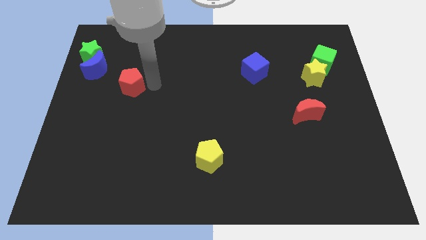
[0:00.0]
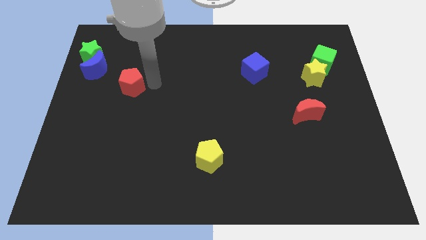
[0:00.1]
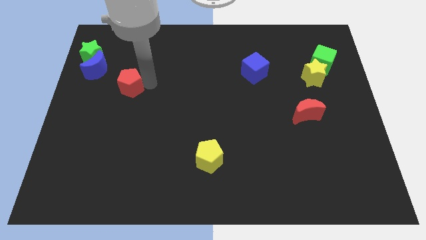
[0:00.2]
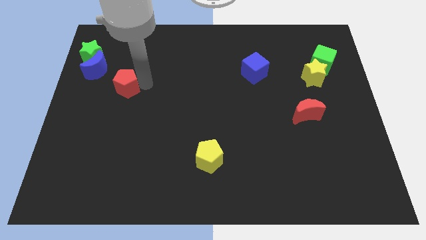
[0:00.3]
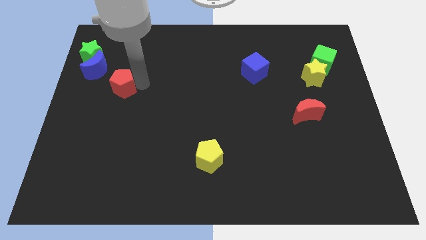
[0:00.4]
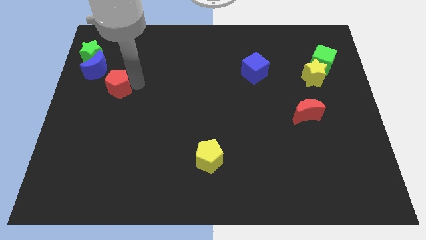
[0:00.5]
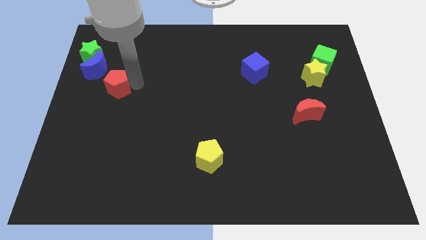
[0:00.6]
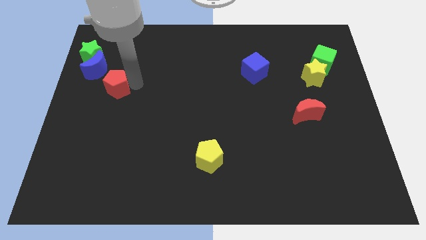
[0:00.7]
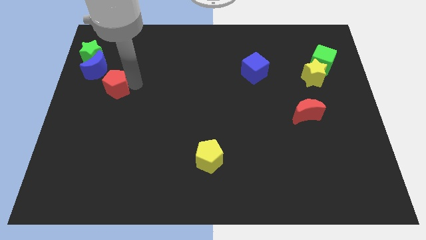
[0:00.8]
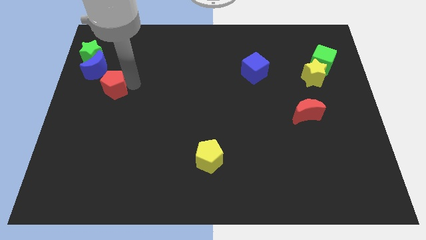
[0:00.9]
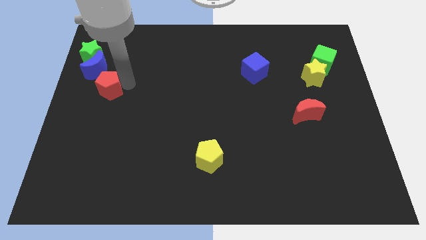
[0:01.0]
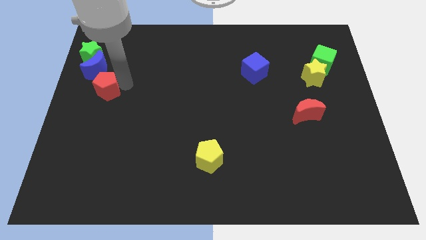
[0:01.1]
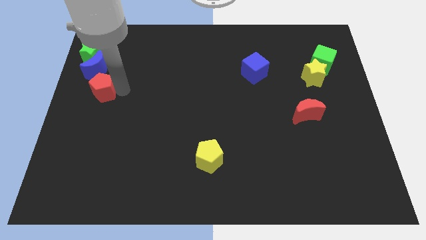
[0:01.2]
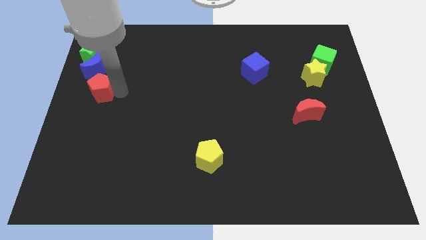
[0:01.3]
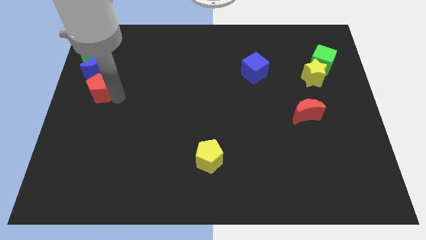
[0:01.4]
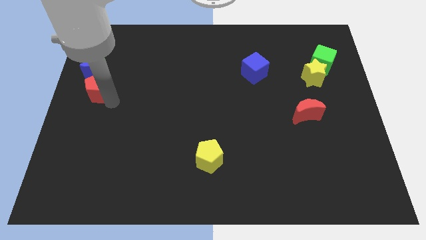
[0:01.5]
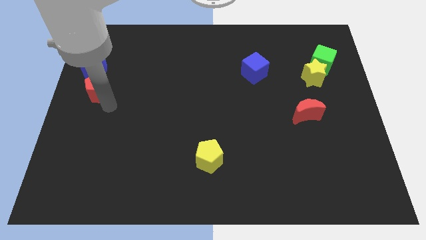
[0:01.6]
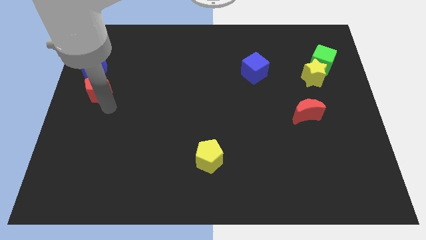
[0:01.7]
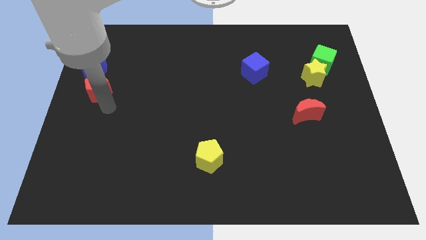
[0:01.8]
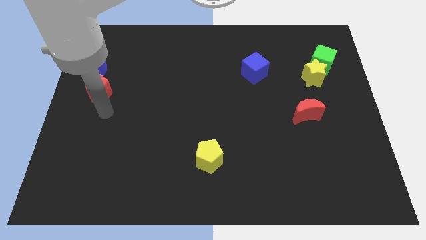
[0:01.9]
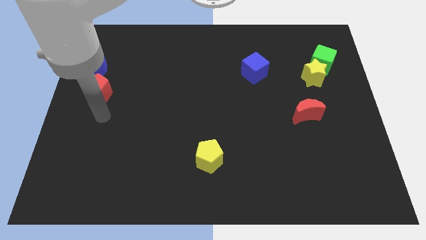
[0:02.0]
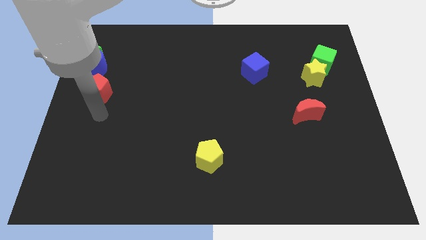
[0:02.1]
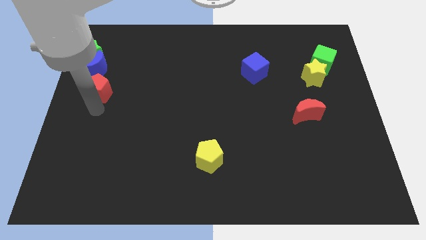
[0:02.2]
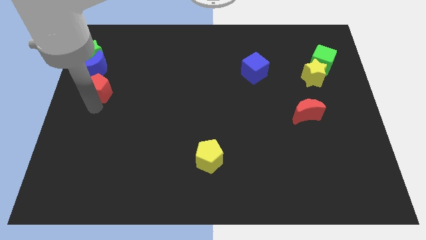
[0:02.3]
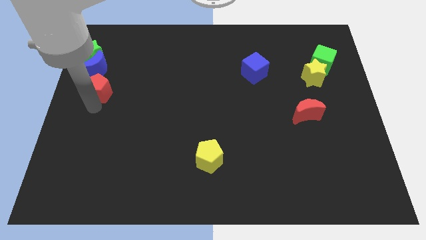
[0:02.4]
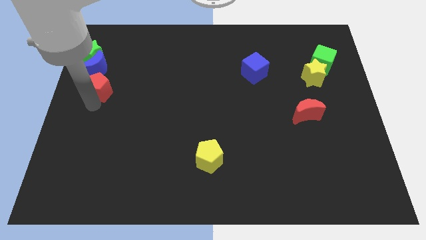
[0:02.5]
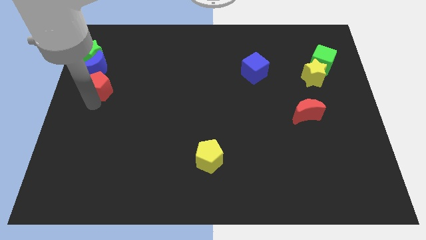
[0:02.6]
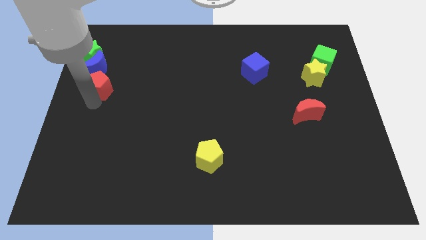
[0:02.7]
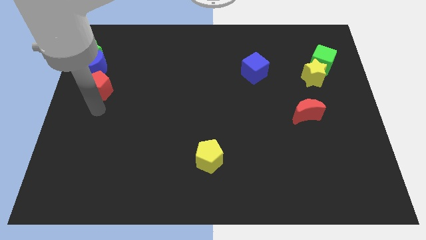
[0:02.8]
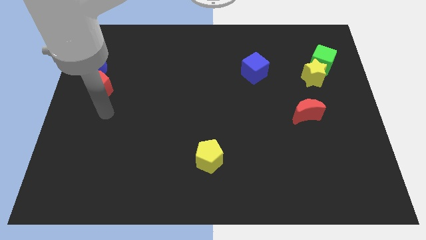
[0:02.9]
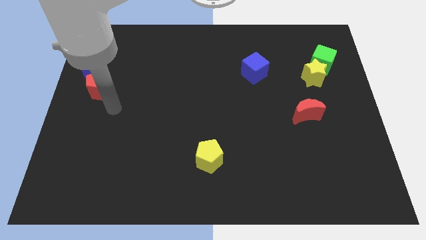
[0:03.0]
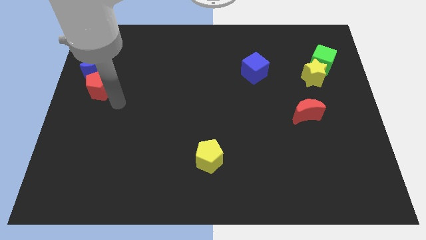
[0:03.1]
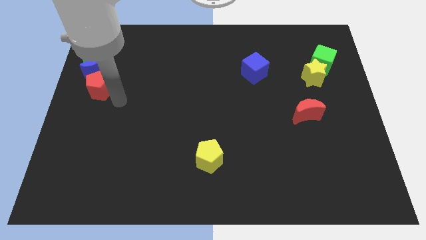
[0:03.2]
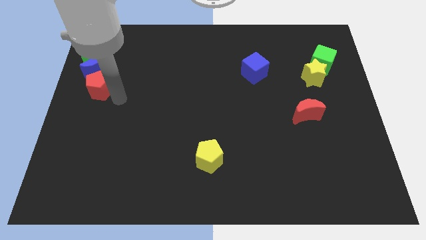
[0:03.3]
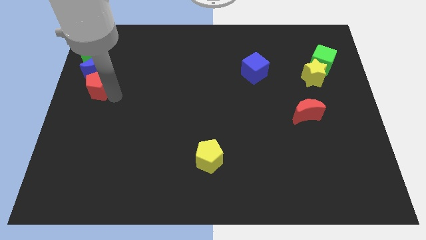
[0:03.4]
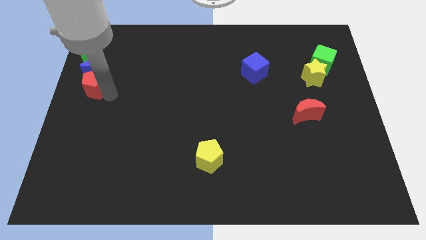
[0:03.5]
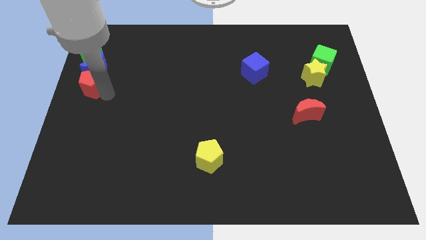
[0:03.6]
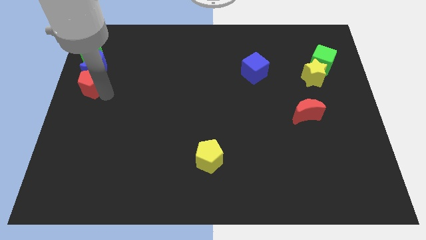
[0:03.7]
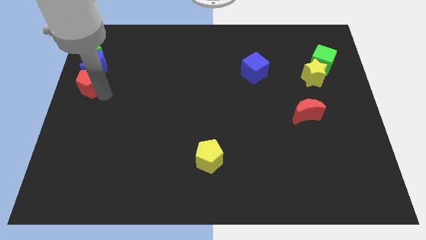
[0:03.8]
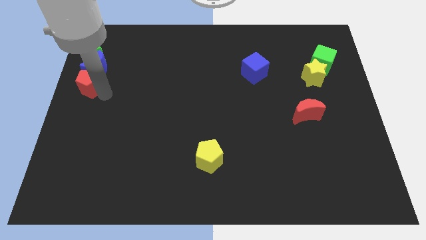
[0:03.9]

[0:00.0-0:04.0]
move the red pentagon to the bottom of the blue crescent

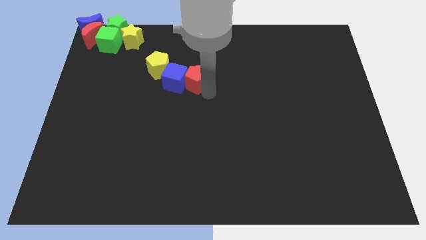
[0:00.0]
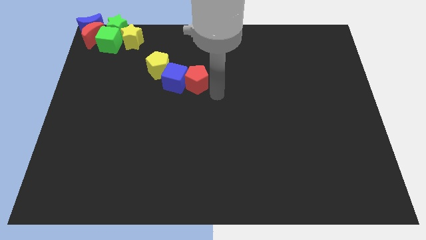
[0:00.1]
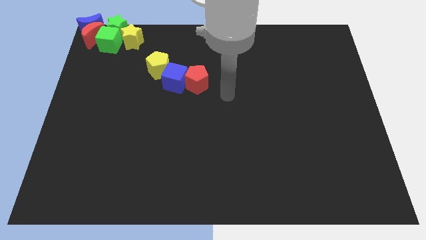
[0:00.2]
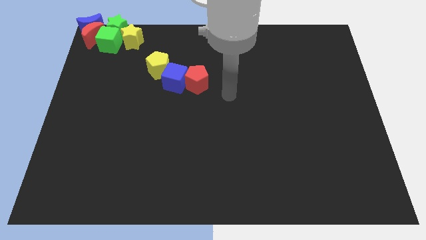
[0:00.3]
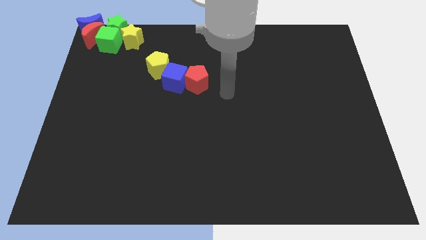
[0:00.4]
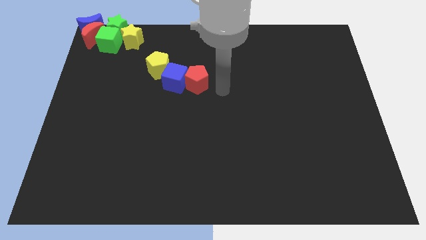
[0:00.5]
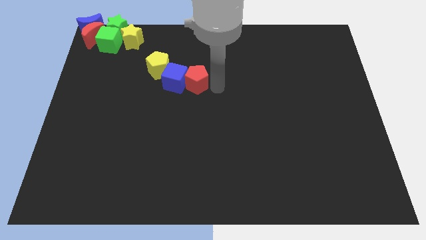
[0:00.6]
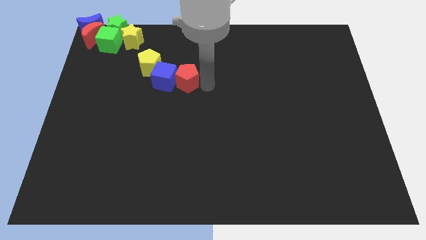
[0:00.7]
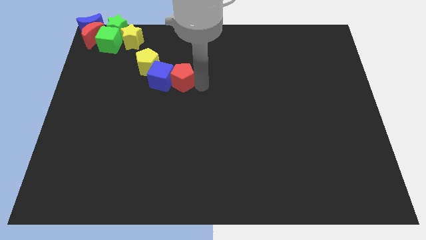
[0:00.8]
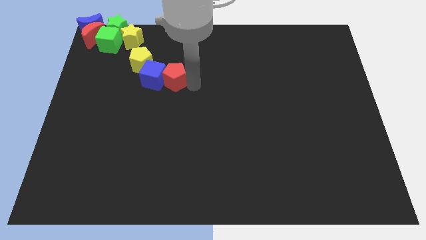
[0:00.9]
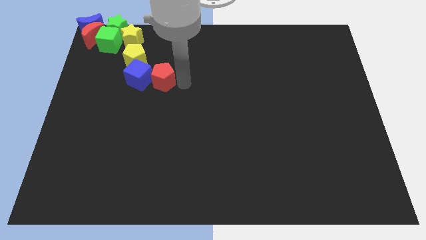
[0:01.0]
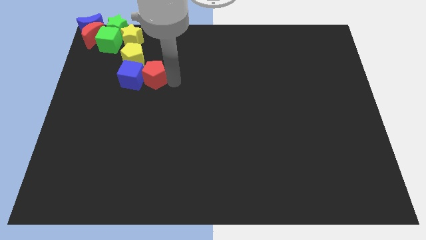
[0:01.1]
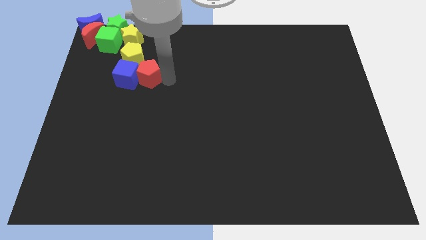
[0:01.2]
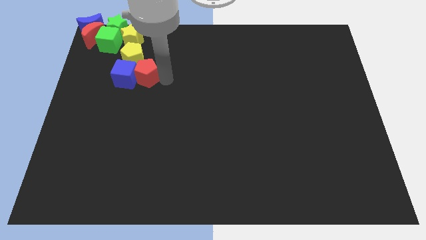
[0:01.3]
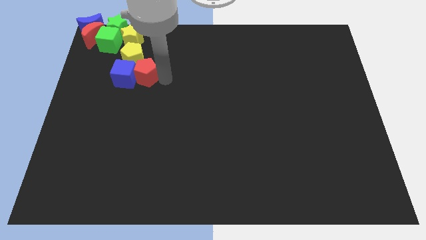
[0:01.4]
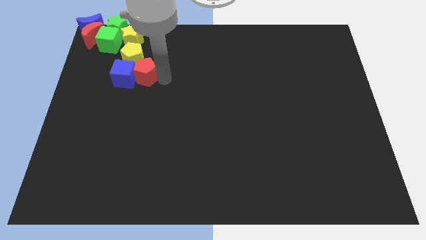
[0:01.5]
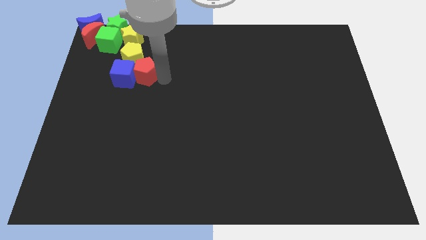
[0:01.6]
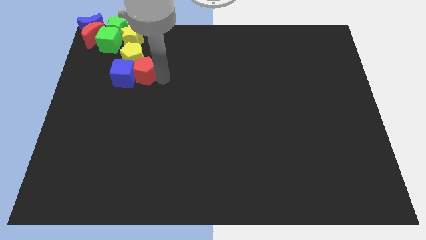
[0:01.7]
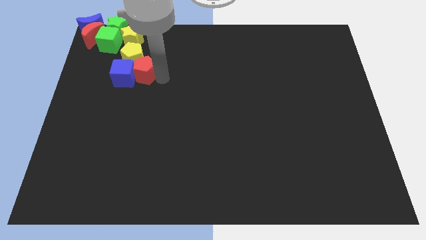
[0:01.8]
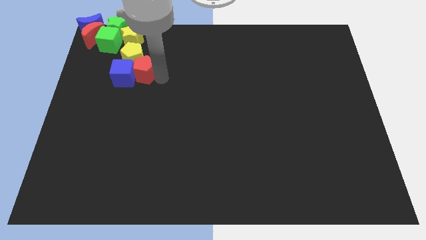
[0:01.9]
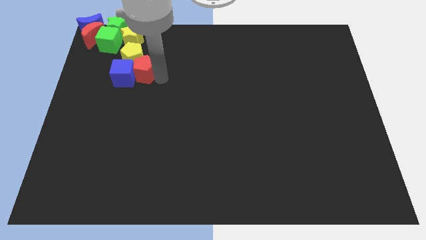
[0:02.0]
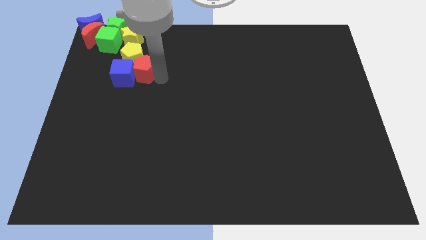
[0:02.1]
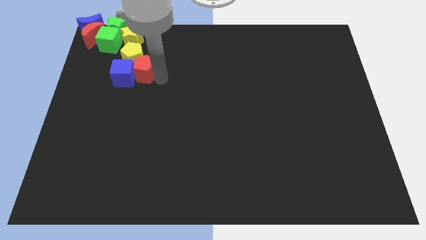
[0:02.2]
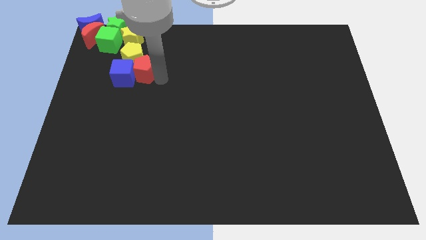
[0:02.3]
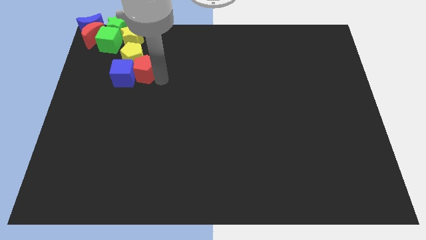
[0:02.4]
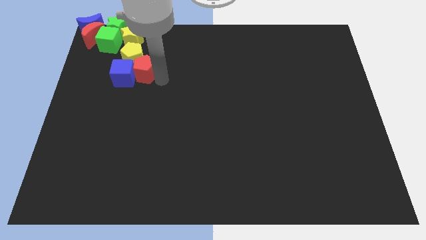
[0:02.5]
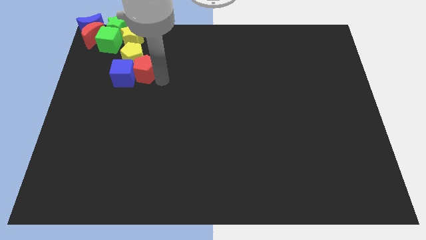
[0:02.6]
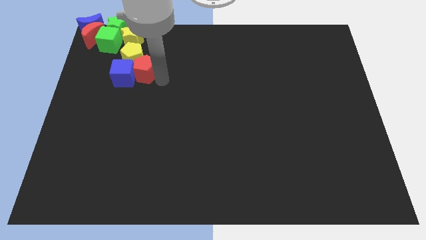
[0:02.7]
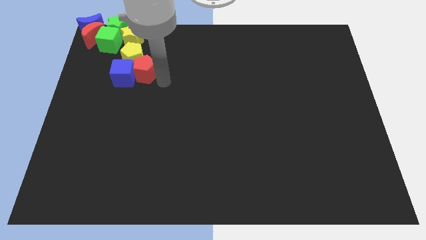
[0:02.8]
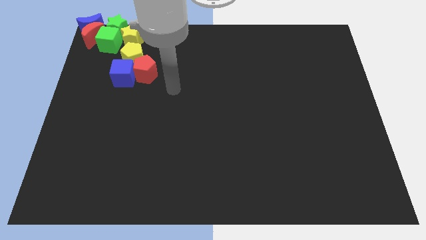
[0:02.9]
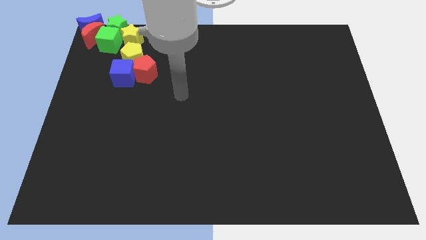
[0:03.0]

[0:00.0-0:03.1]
bring the red pentagon and blue cube at the bottom side of the yellow pentagon

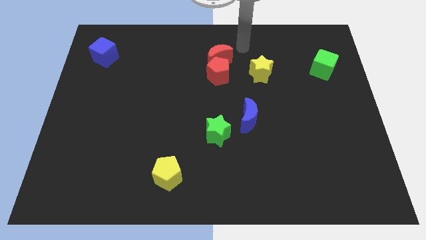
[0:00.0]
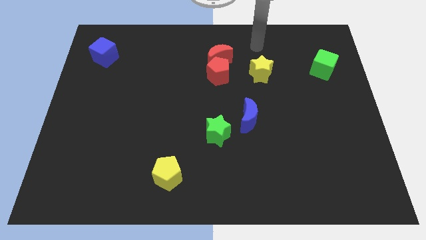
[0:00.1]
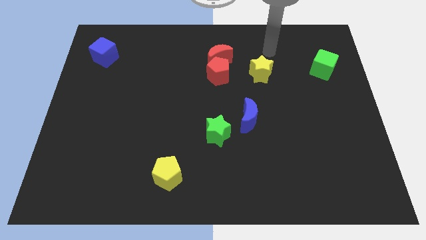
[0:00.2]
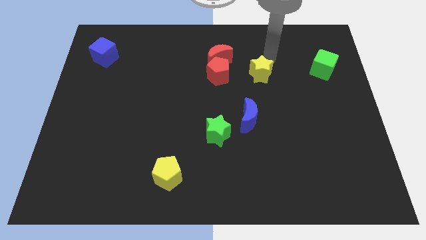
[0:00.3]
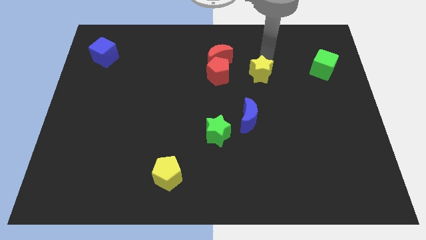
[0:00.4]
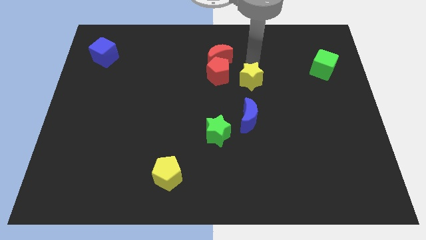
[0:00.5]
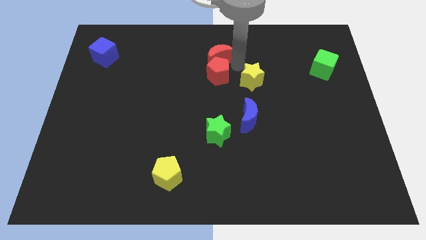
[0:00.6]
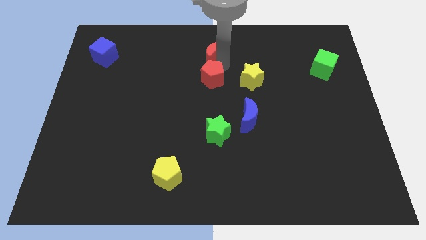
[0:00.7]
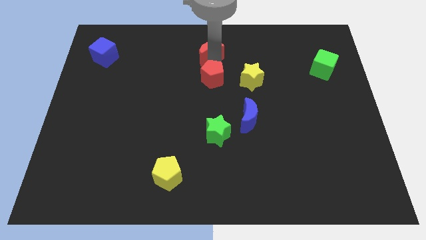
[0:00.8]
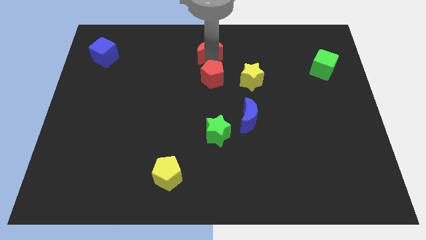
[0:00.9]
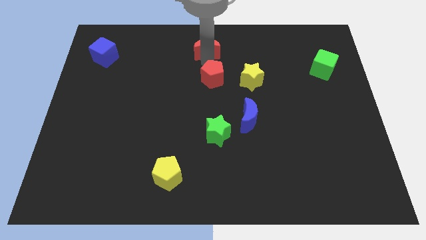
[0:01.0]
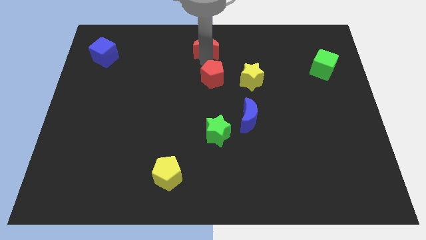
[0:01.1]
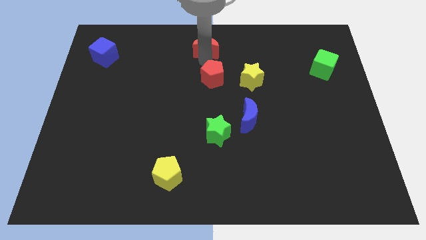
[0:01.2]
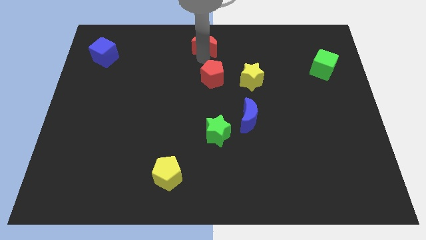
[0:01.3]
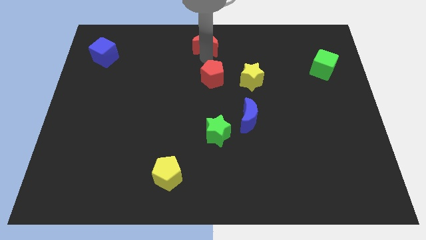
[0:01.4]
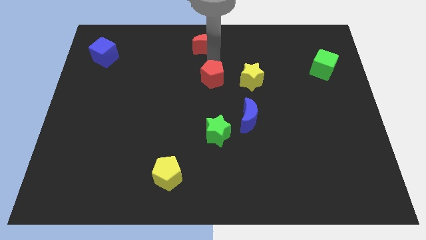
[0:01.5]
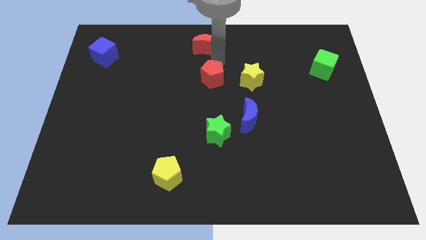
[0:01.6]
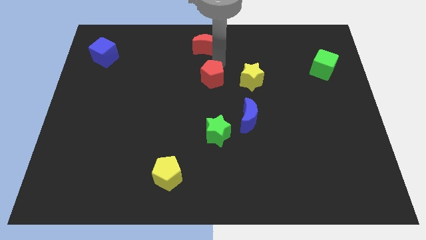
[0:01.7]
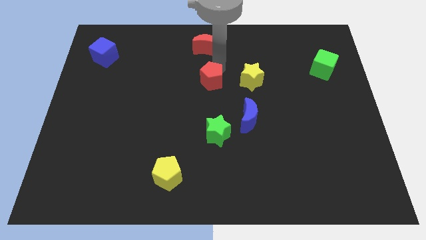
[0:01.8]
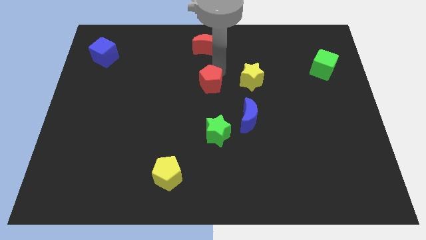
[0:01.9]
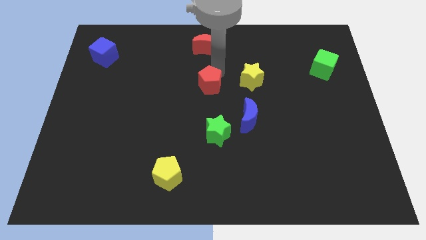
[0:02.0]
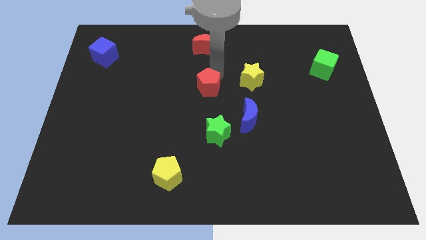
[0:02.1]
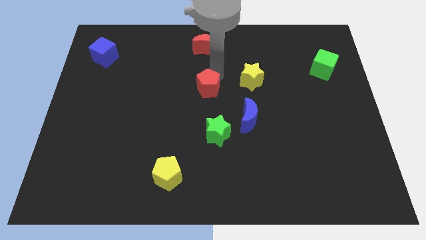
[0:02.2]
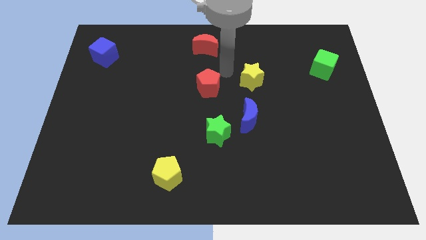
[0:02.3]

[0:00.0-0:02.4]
separate the red moon and red pentagon
